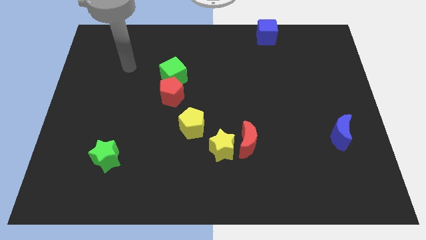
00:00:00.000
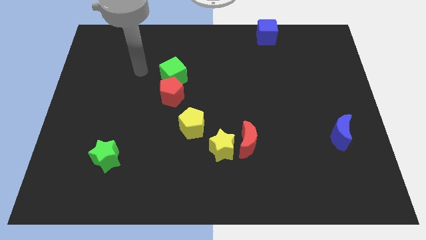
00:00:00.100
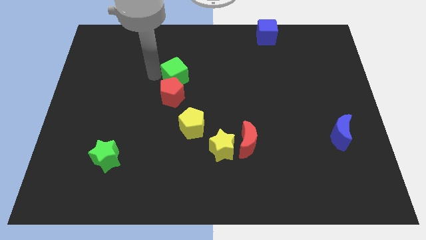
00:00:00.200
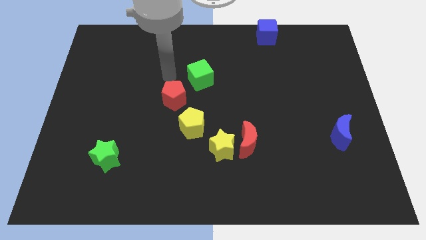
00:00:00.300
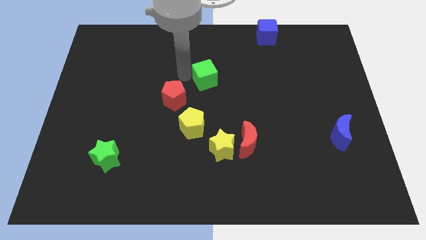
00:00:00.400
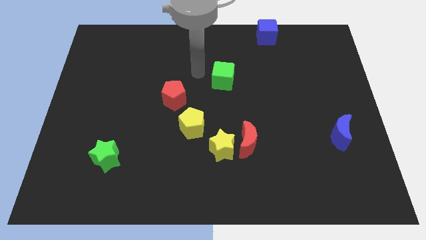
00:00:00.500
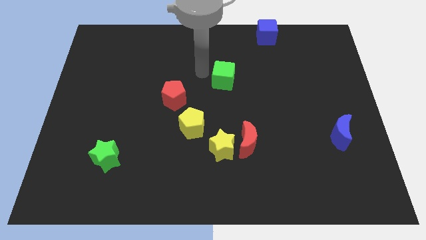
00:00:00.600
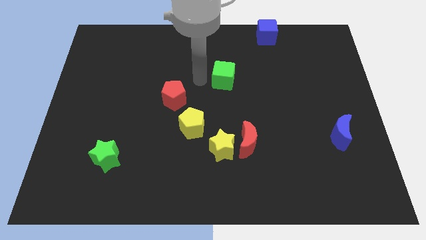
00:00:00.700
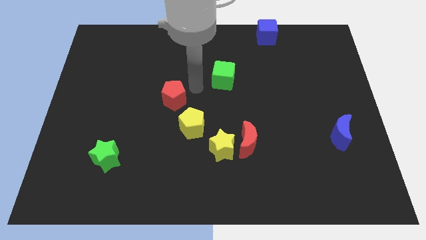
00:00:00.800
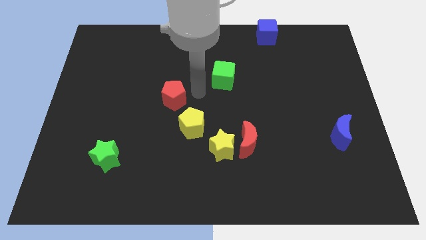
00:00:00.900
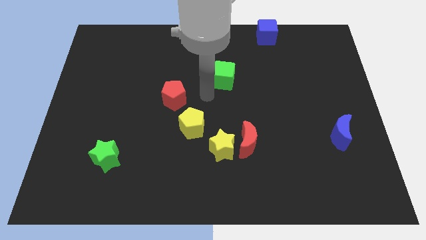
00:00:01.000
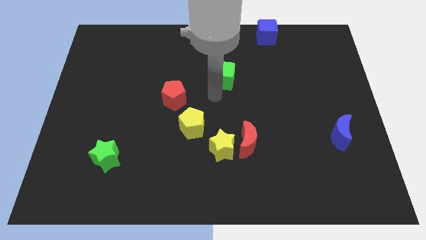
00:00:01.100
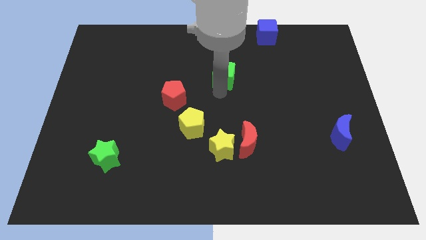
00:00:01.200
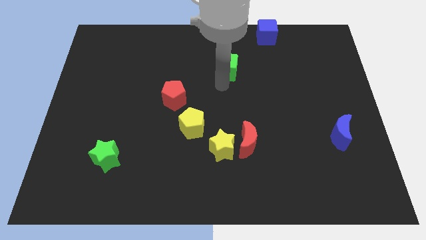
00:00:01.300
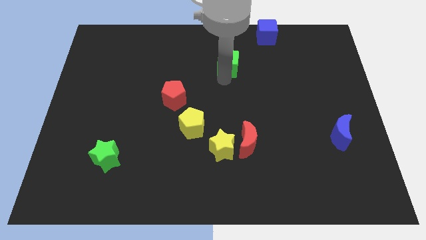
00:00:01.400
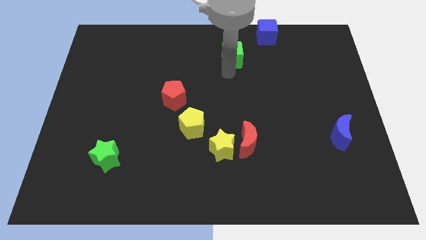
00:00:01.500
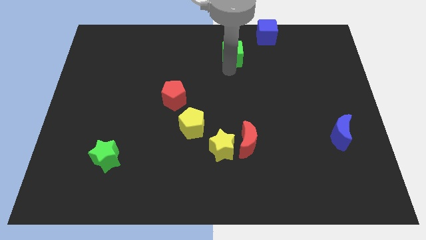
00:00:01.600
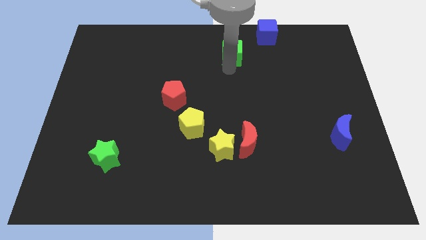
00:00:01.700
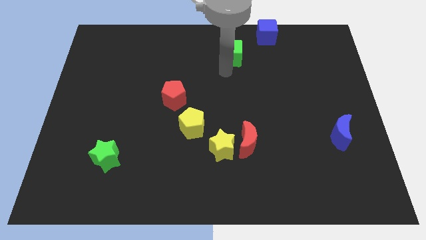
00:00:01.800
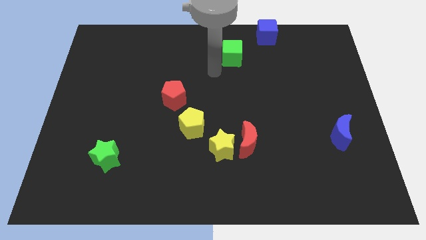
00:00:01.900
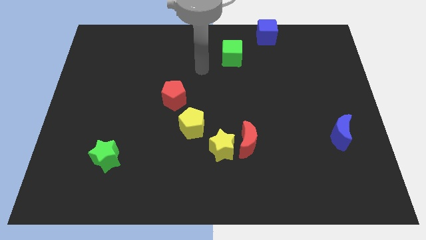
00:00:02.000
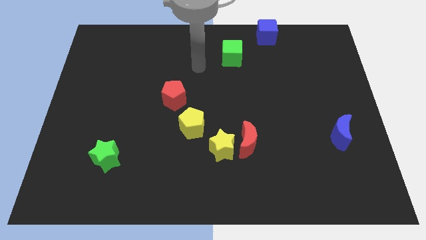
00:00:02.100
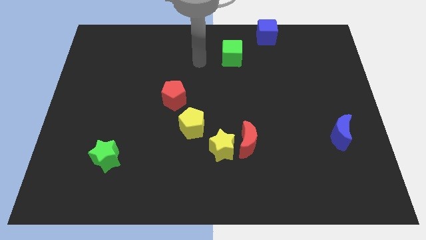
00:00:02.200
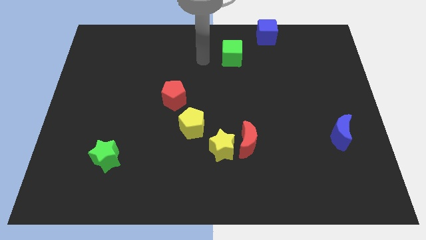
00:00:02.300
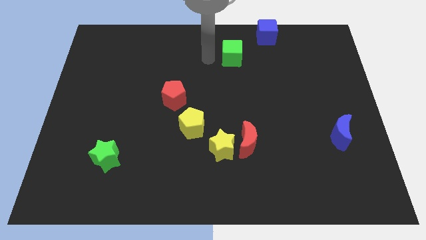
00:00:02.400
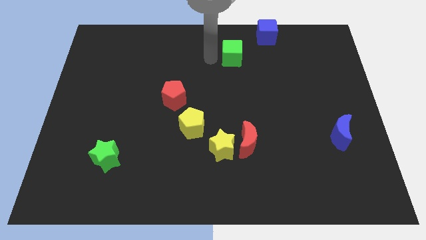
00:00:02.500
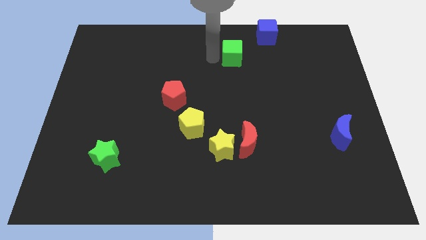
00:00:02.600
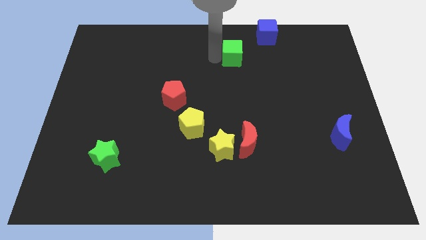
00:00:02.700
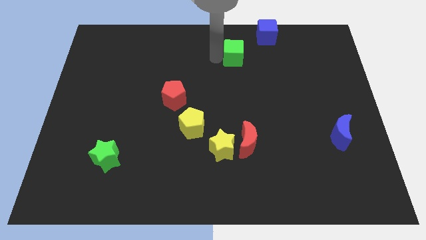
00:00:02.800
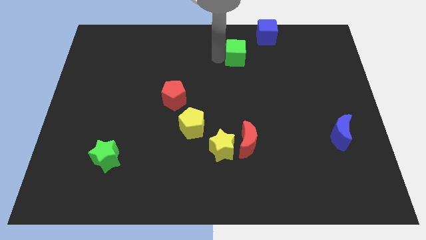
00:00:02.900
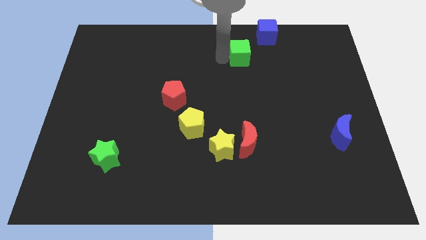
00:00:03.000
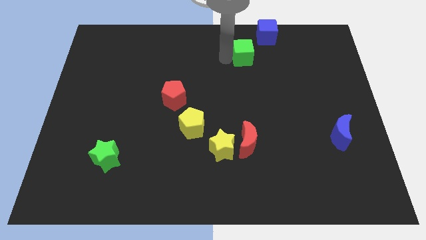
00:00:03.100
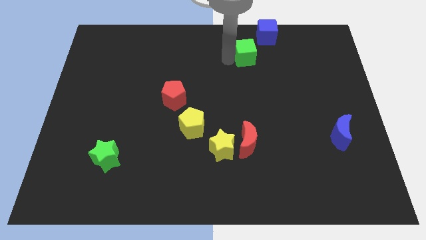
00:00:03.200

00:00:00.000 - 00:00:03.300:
push the green cube to the bottom left of the blue cube

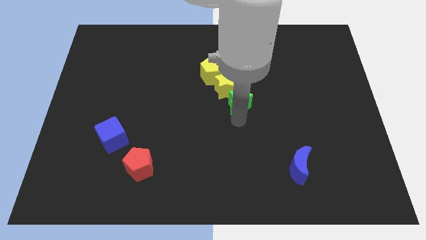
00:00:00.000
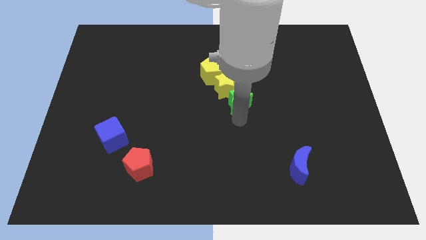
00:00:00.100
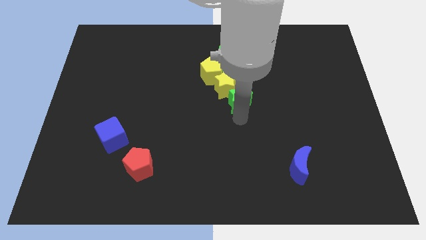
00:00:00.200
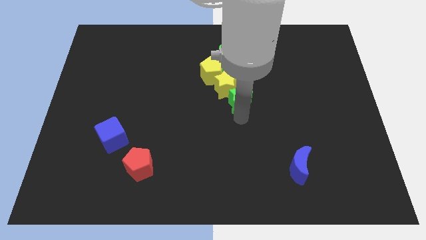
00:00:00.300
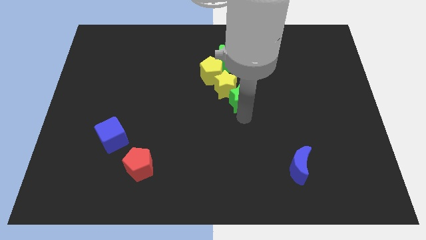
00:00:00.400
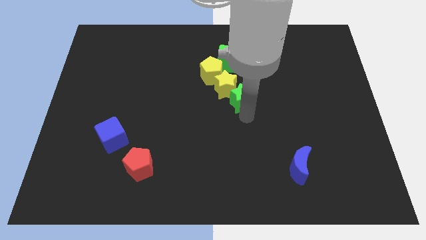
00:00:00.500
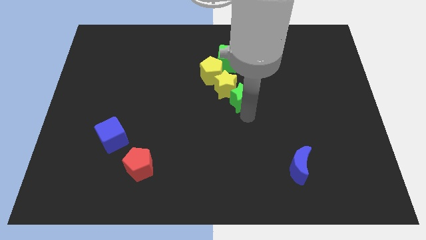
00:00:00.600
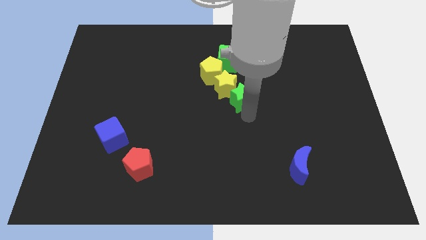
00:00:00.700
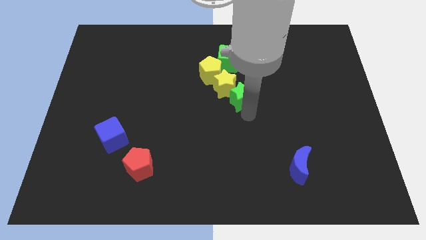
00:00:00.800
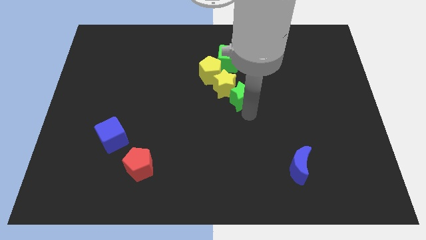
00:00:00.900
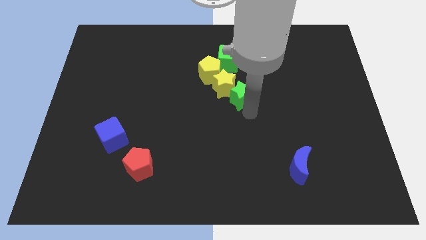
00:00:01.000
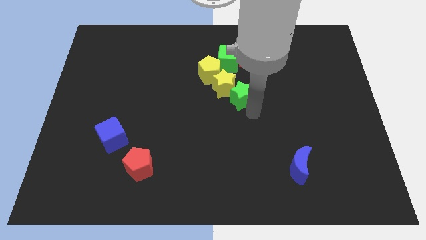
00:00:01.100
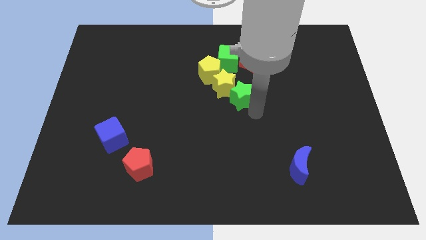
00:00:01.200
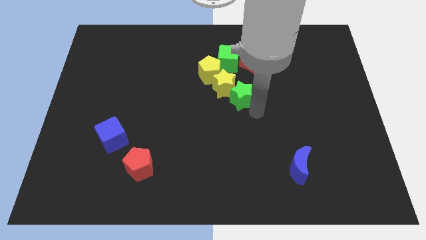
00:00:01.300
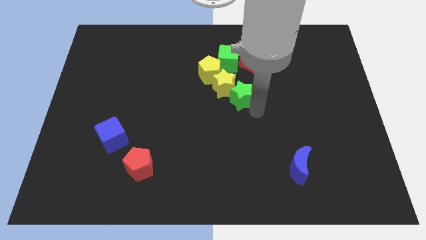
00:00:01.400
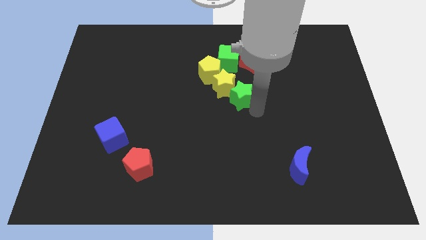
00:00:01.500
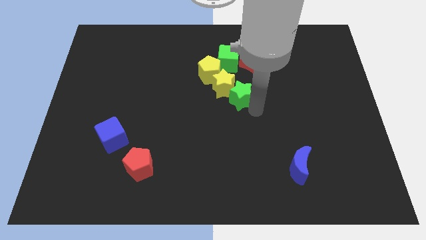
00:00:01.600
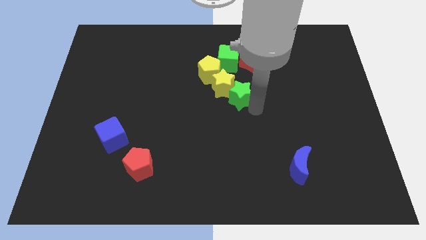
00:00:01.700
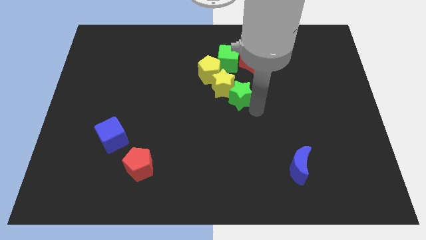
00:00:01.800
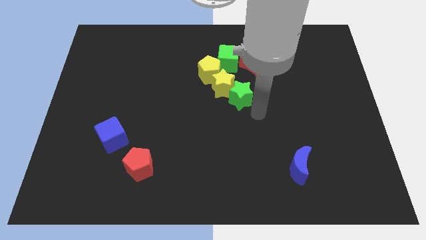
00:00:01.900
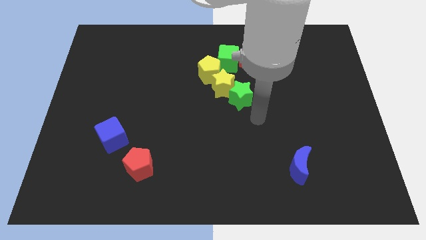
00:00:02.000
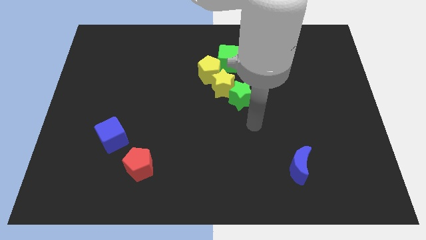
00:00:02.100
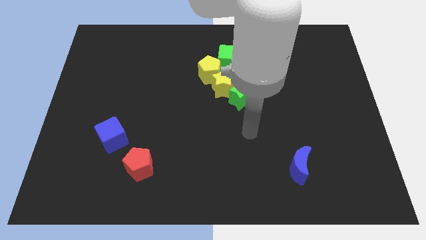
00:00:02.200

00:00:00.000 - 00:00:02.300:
slightly touch yellow star with green star

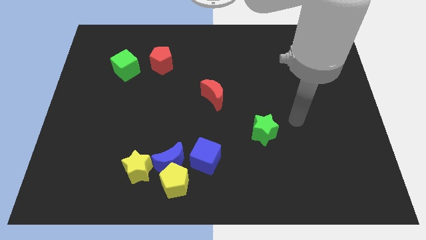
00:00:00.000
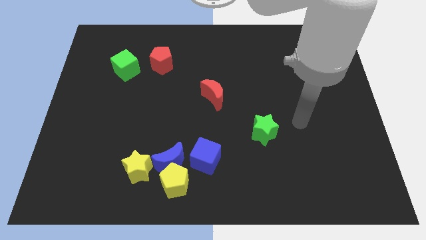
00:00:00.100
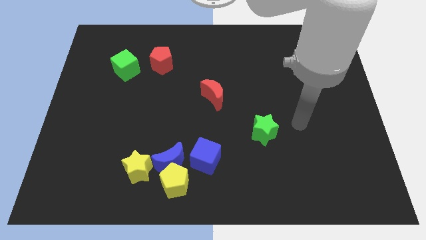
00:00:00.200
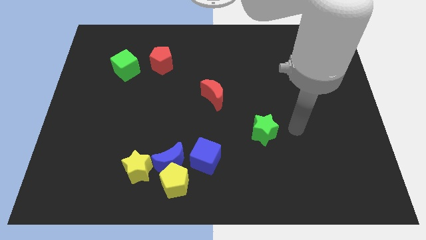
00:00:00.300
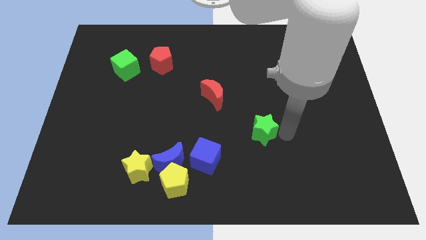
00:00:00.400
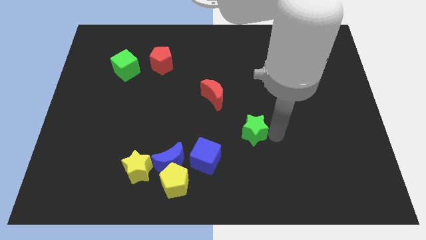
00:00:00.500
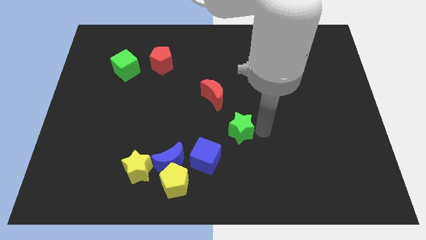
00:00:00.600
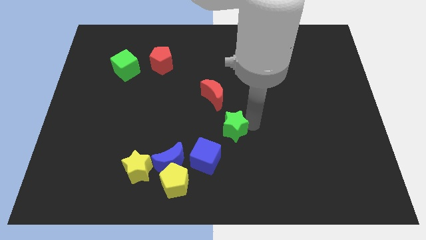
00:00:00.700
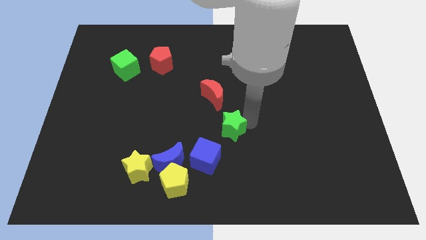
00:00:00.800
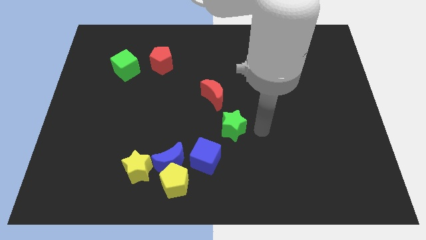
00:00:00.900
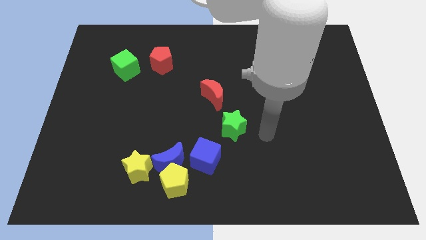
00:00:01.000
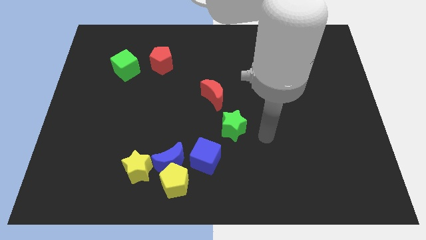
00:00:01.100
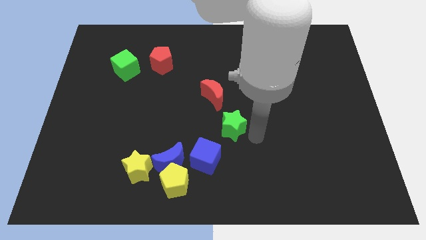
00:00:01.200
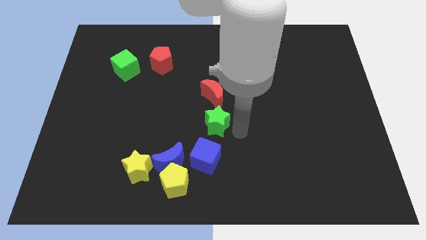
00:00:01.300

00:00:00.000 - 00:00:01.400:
move the green star to the top of the blue cube

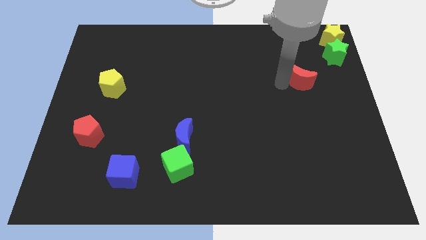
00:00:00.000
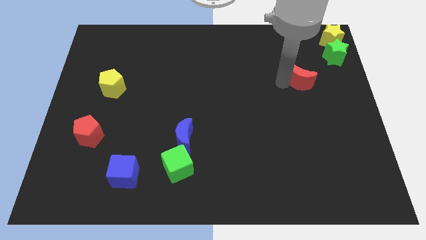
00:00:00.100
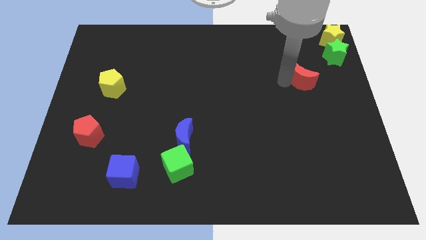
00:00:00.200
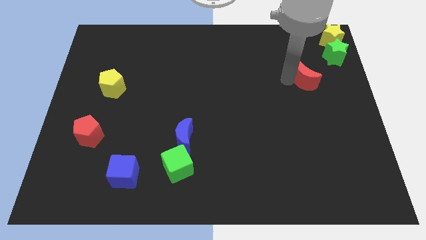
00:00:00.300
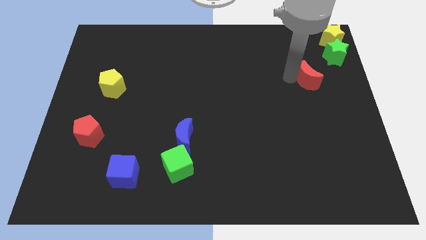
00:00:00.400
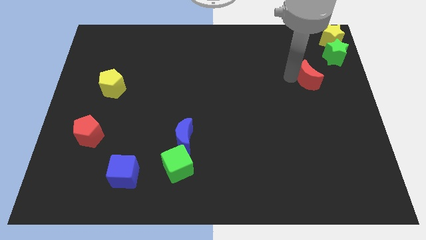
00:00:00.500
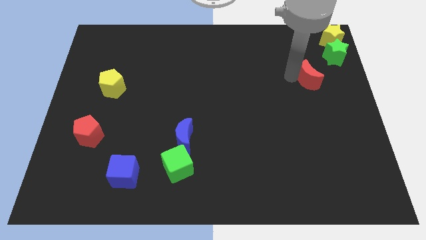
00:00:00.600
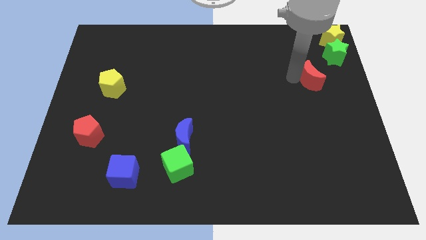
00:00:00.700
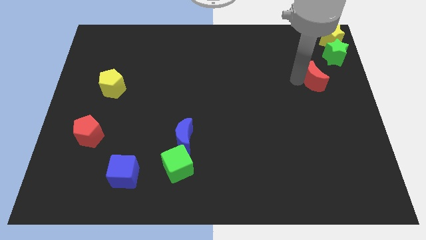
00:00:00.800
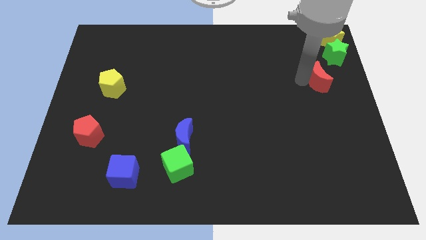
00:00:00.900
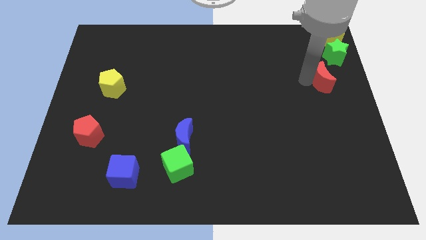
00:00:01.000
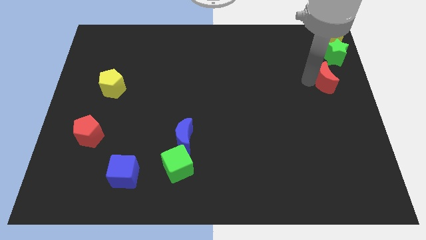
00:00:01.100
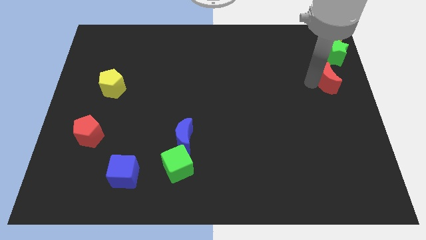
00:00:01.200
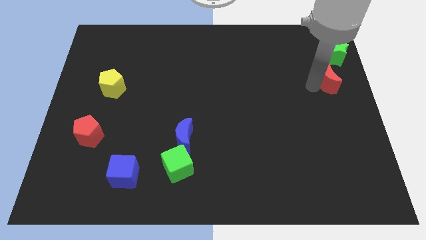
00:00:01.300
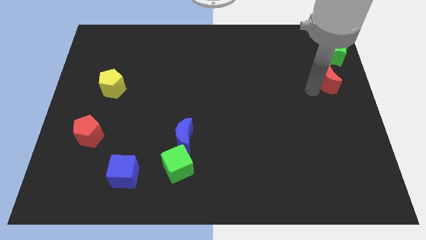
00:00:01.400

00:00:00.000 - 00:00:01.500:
move red moon below green star

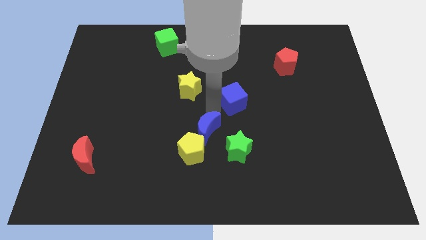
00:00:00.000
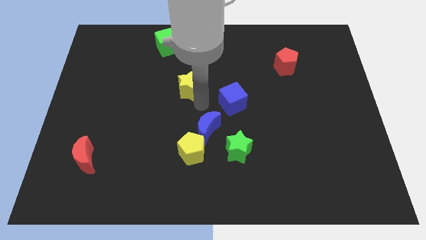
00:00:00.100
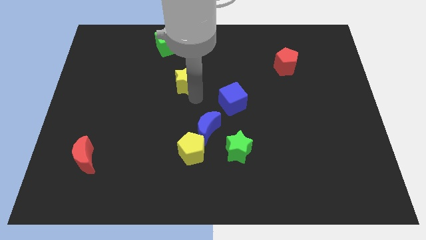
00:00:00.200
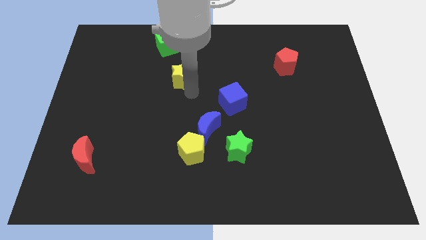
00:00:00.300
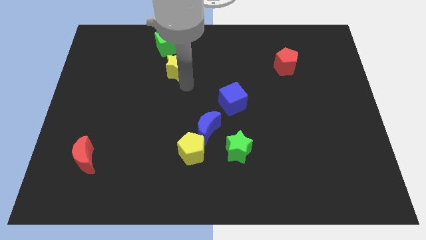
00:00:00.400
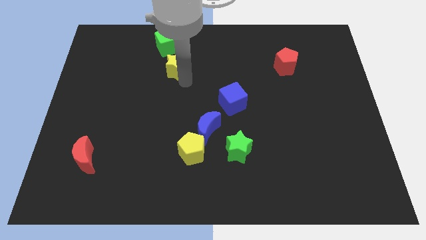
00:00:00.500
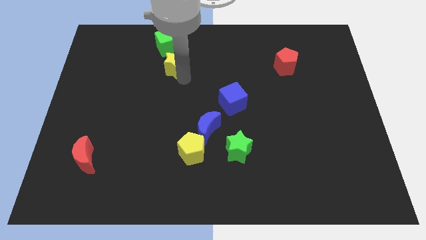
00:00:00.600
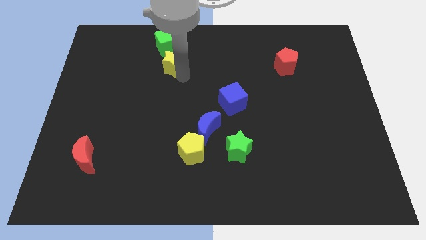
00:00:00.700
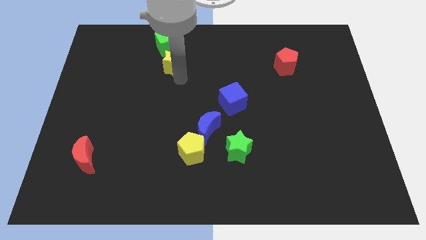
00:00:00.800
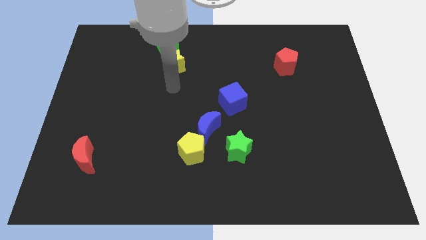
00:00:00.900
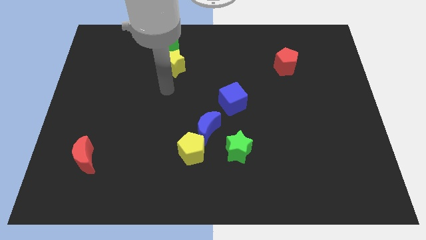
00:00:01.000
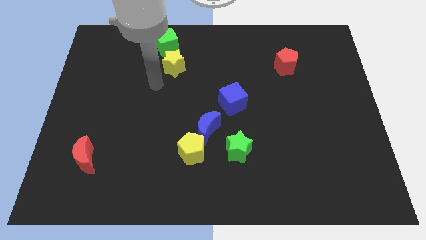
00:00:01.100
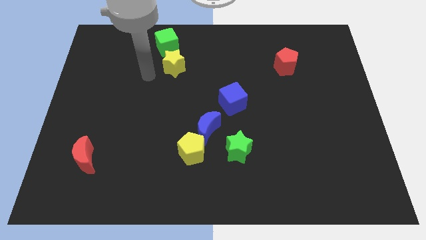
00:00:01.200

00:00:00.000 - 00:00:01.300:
move the yellow star to the bottom of the green cube
